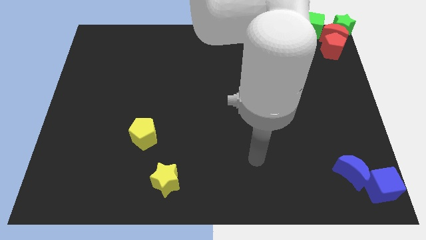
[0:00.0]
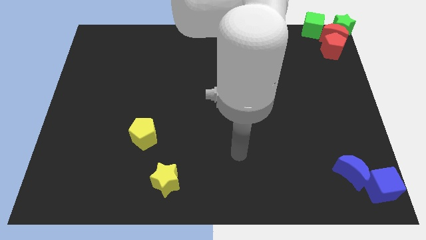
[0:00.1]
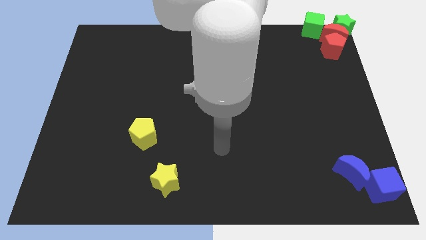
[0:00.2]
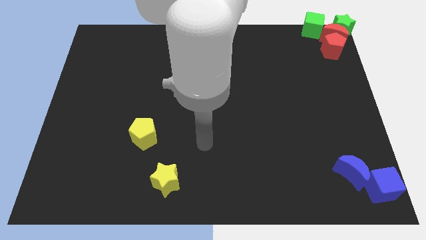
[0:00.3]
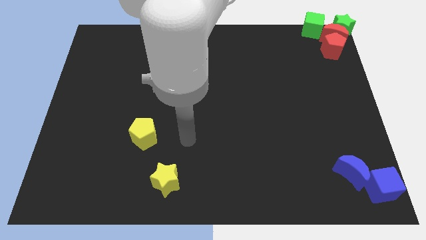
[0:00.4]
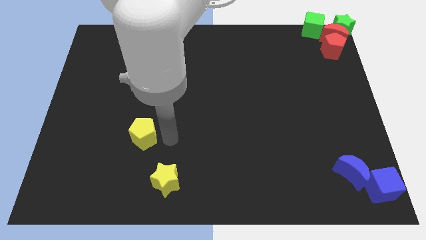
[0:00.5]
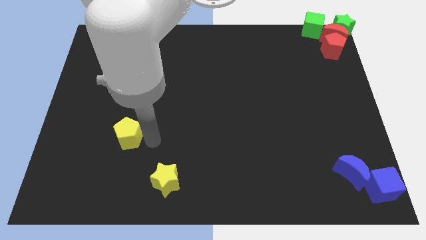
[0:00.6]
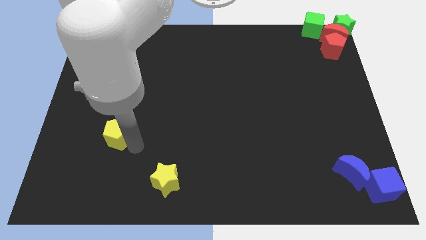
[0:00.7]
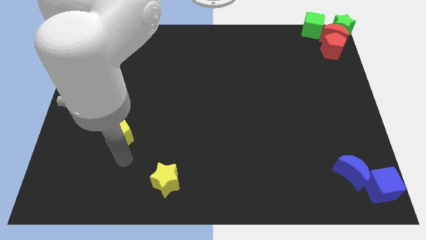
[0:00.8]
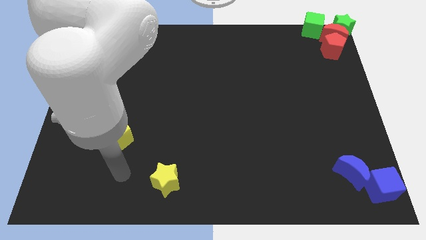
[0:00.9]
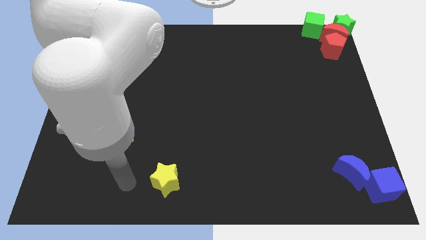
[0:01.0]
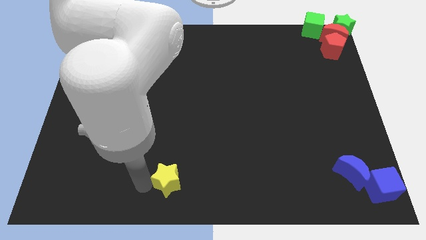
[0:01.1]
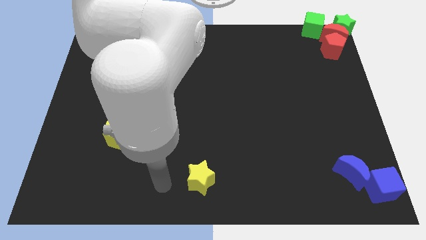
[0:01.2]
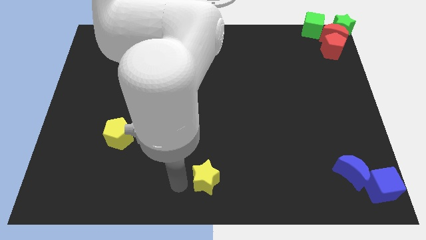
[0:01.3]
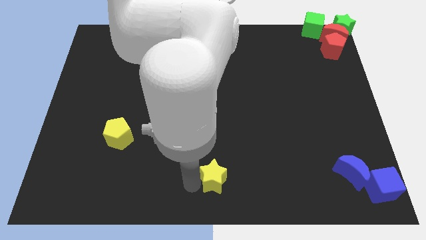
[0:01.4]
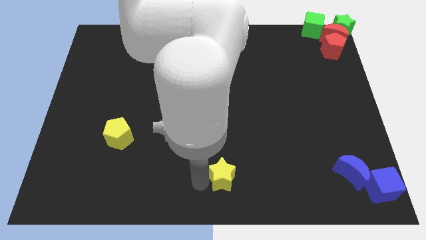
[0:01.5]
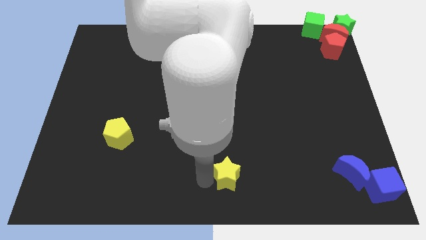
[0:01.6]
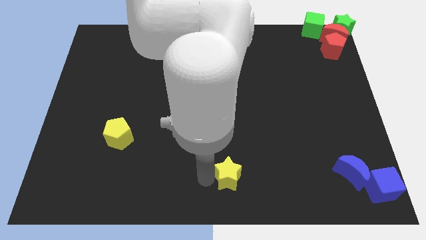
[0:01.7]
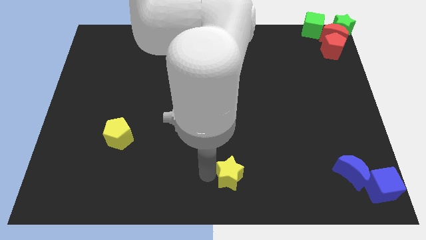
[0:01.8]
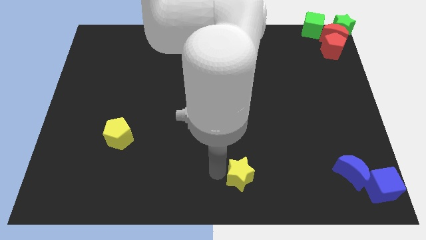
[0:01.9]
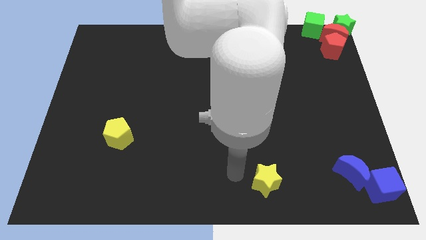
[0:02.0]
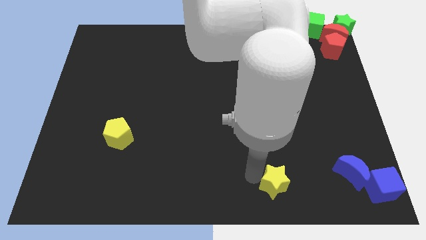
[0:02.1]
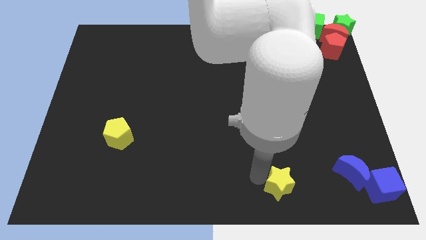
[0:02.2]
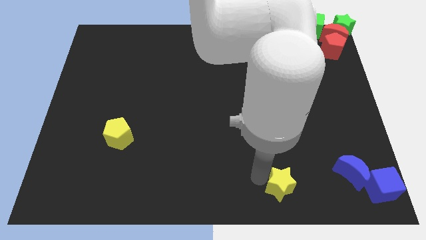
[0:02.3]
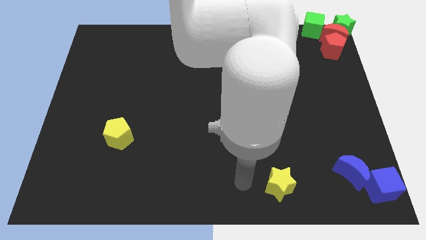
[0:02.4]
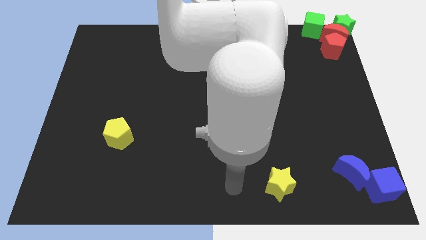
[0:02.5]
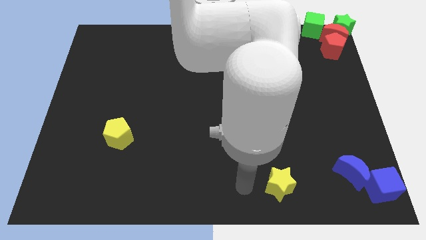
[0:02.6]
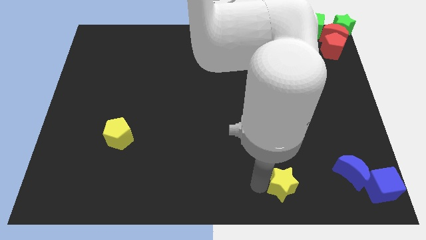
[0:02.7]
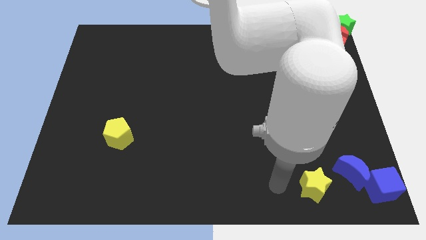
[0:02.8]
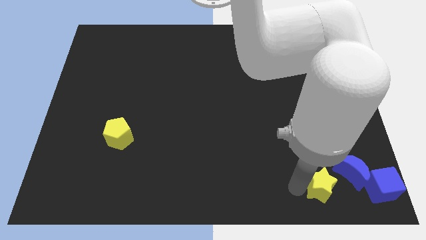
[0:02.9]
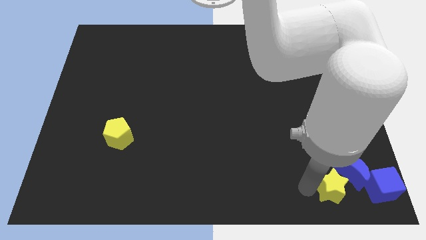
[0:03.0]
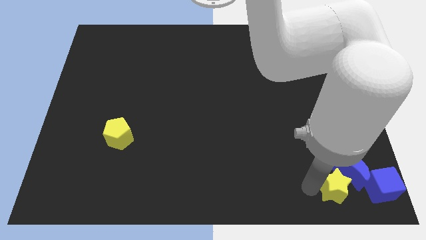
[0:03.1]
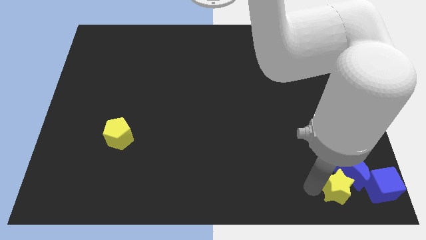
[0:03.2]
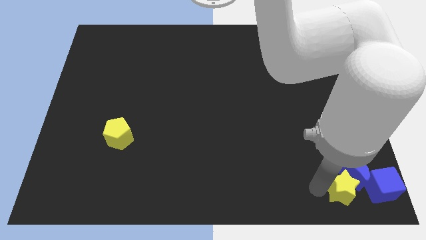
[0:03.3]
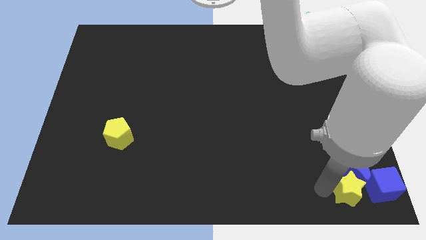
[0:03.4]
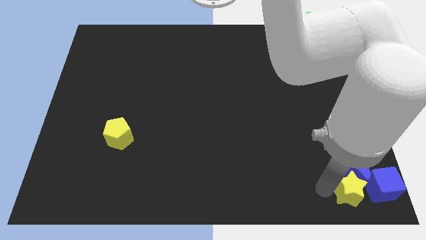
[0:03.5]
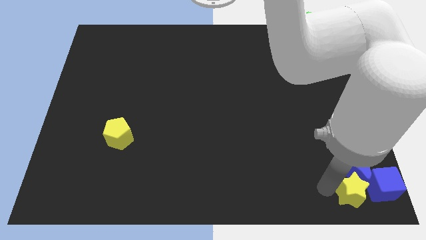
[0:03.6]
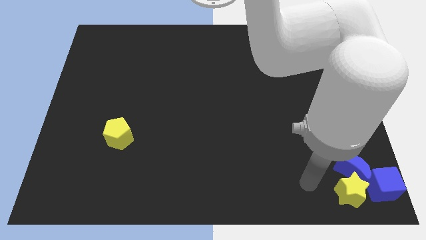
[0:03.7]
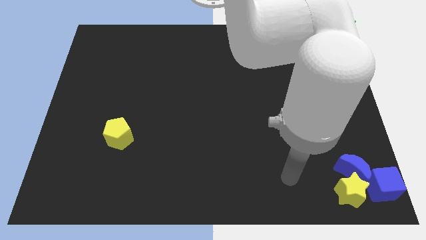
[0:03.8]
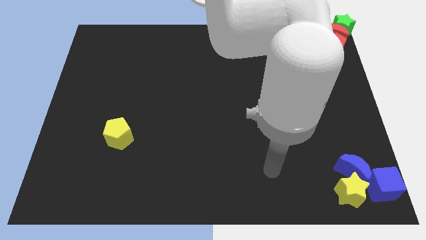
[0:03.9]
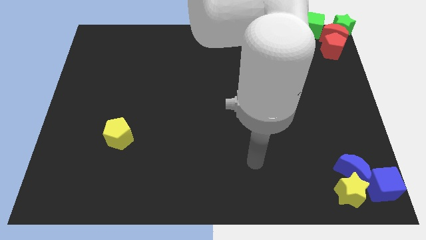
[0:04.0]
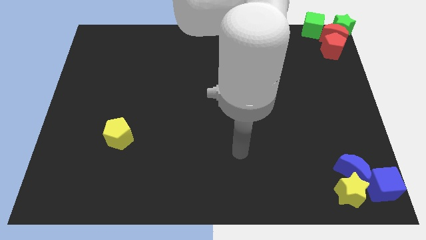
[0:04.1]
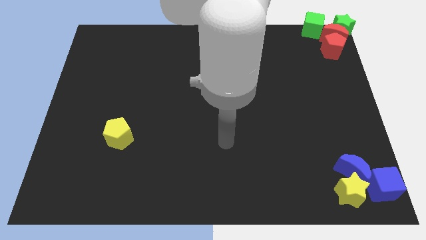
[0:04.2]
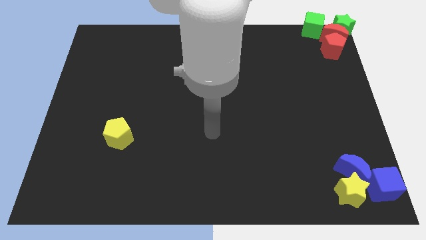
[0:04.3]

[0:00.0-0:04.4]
move the yellow star to the left of blue cube

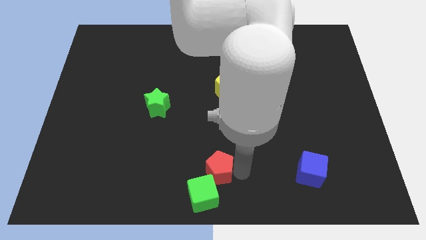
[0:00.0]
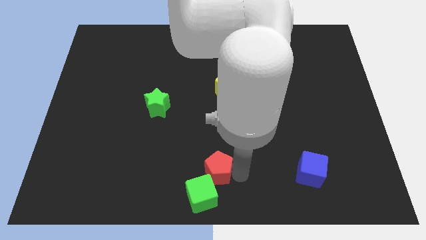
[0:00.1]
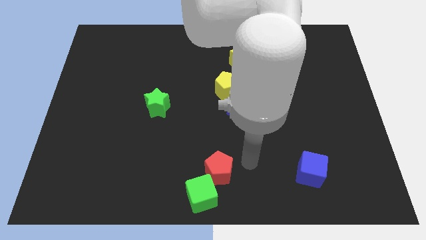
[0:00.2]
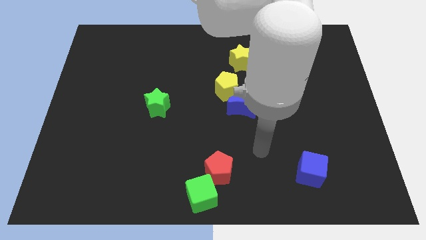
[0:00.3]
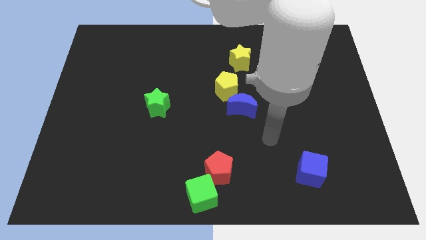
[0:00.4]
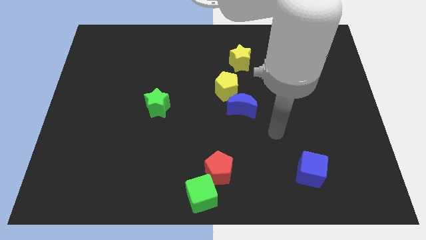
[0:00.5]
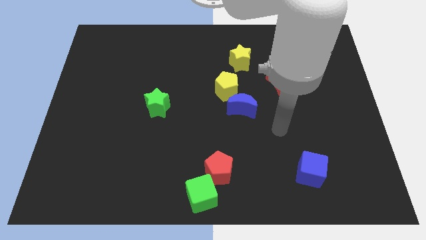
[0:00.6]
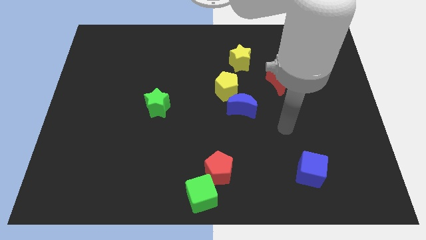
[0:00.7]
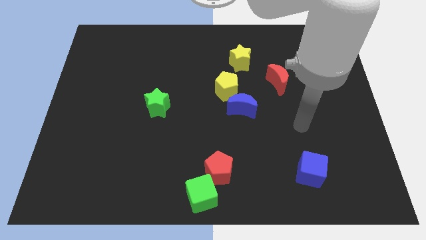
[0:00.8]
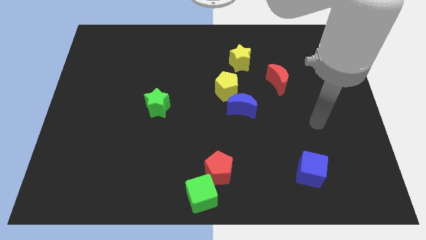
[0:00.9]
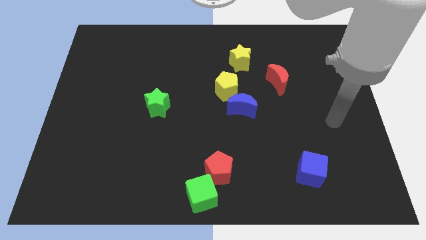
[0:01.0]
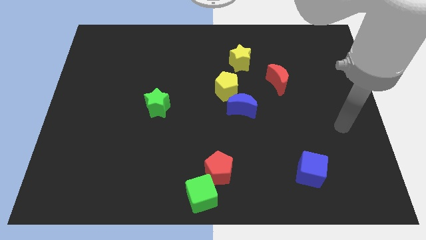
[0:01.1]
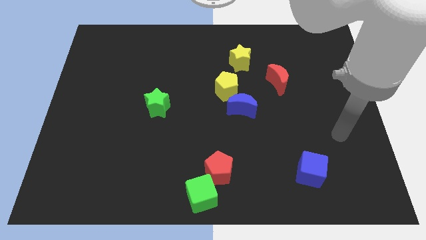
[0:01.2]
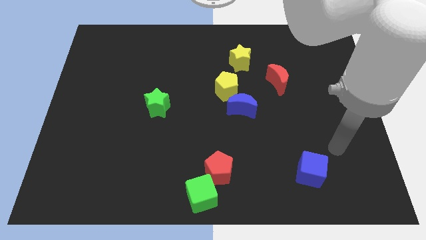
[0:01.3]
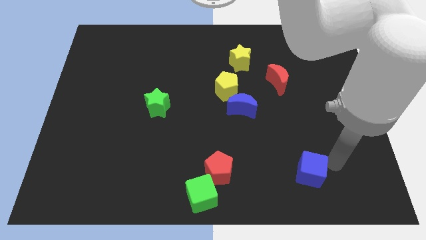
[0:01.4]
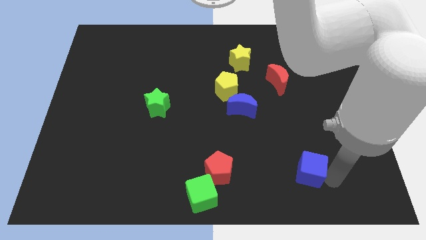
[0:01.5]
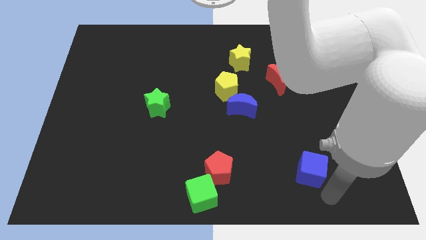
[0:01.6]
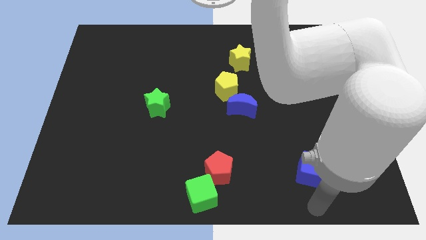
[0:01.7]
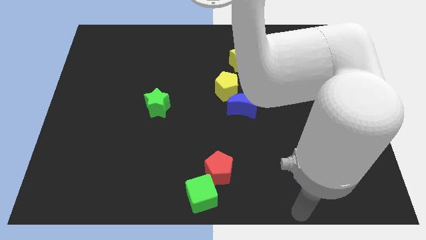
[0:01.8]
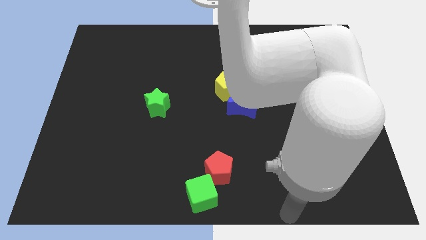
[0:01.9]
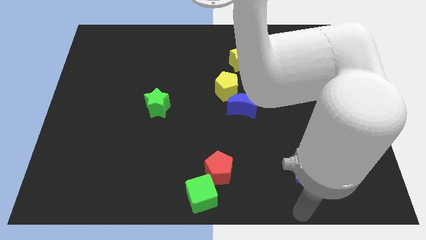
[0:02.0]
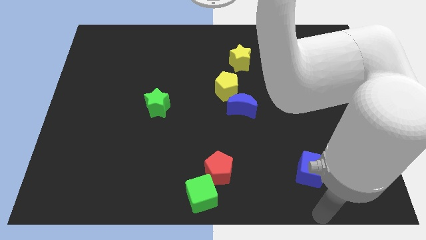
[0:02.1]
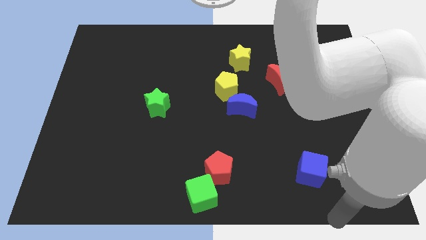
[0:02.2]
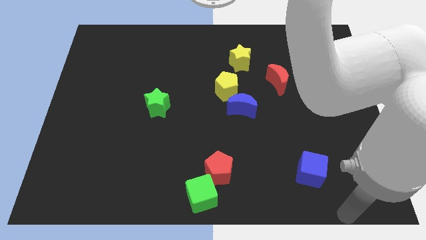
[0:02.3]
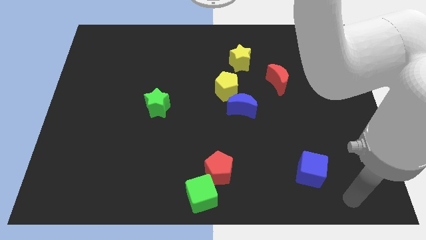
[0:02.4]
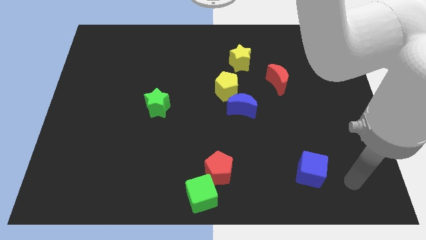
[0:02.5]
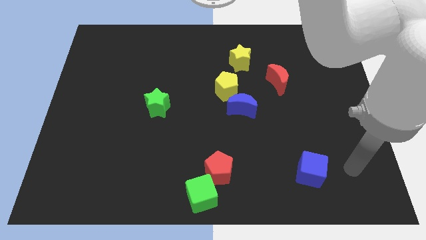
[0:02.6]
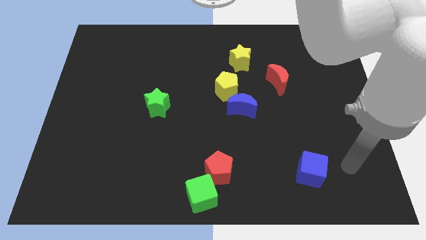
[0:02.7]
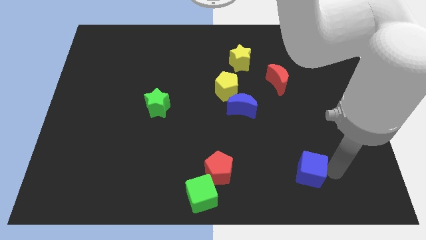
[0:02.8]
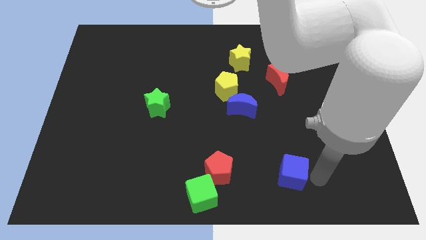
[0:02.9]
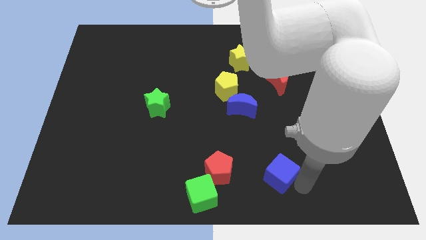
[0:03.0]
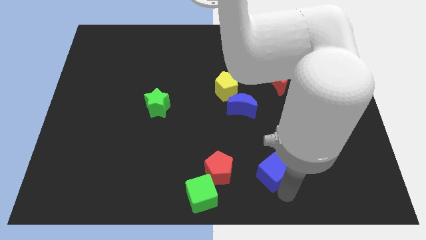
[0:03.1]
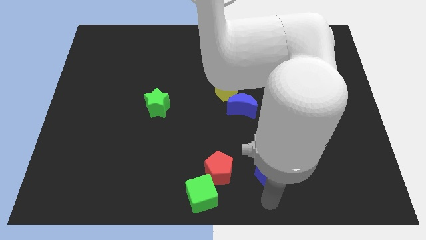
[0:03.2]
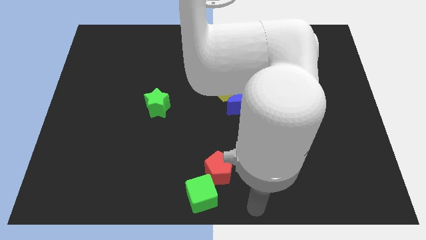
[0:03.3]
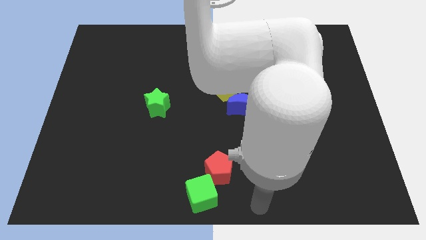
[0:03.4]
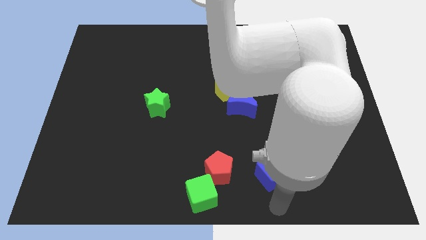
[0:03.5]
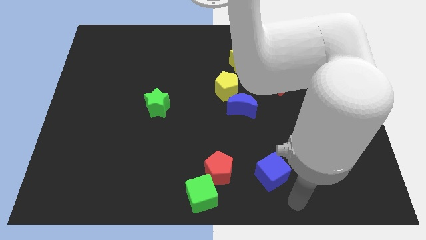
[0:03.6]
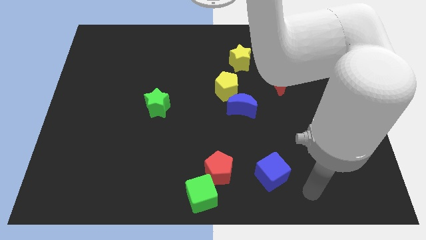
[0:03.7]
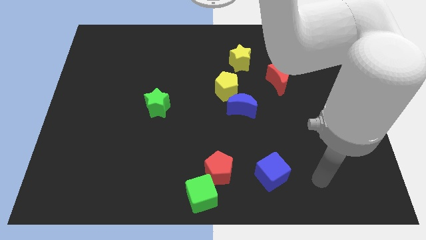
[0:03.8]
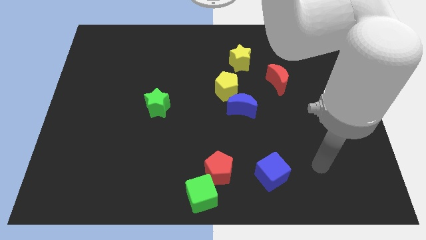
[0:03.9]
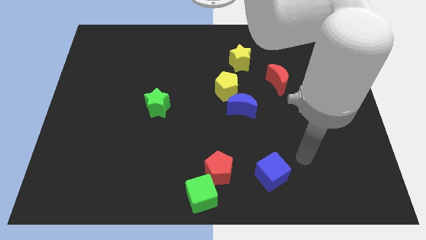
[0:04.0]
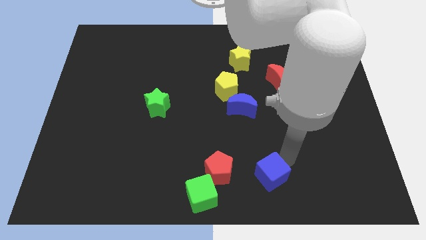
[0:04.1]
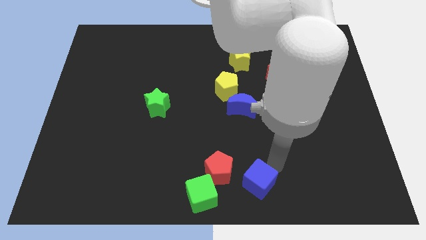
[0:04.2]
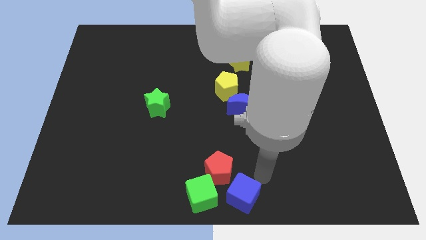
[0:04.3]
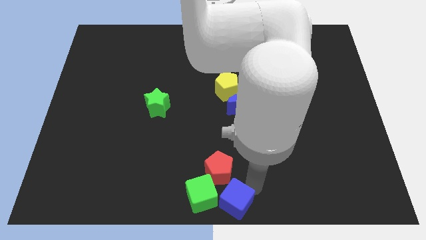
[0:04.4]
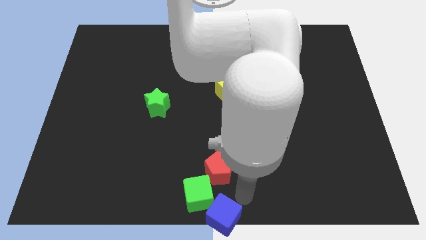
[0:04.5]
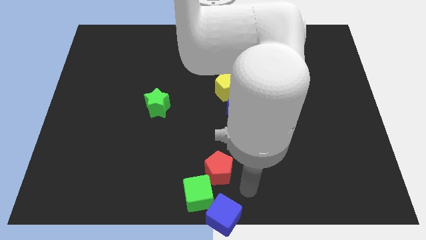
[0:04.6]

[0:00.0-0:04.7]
push the blue cube to the bottom center of the board
